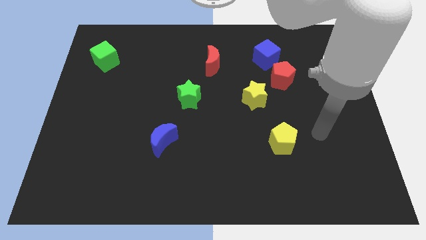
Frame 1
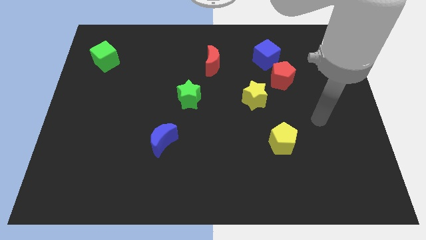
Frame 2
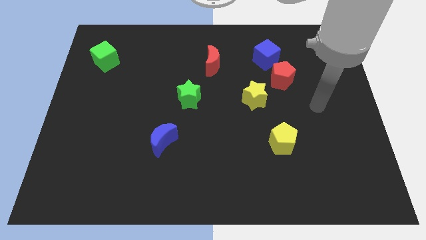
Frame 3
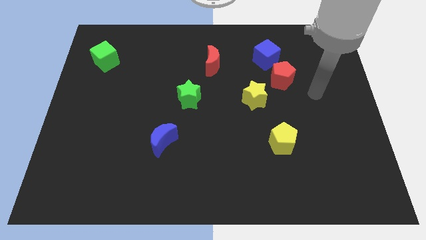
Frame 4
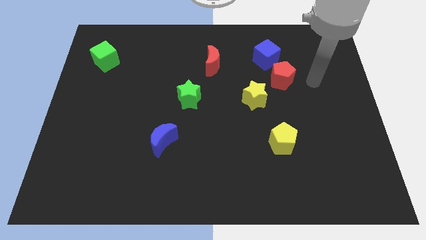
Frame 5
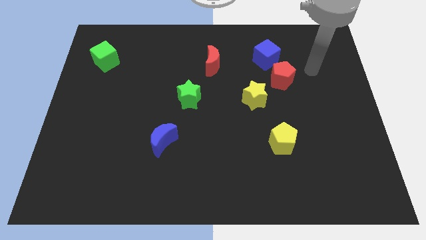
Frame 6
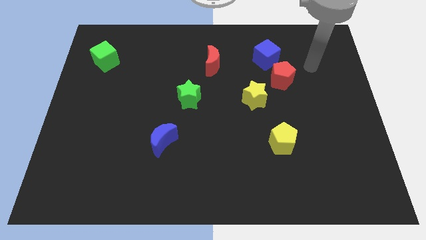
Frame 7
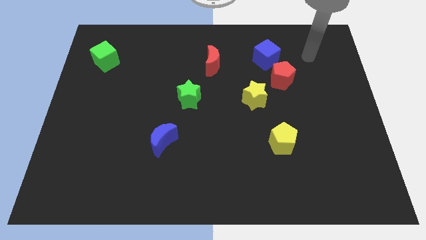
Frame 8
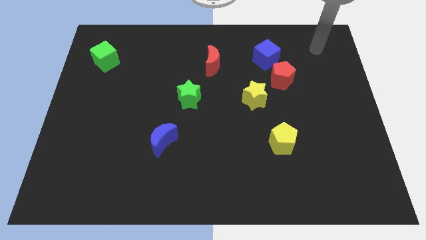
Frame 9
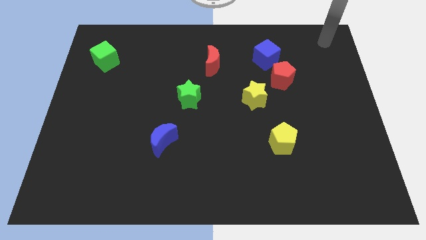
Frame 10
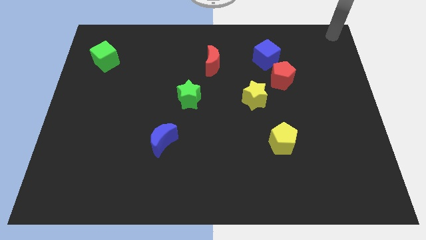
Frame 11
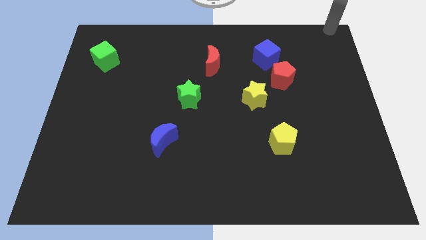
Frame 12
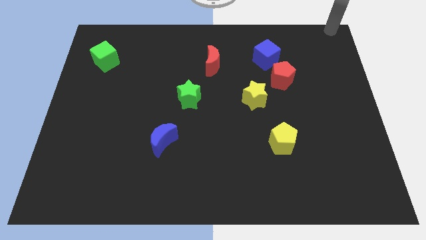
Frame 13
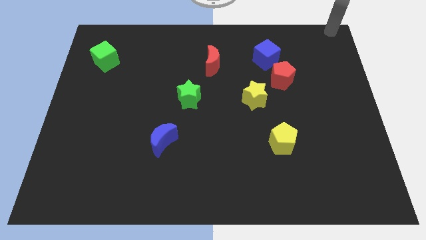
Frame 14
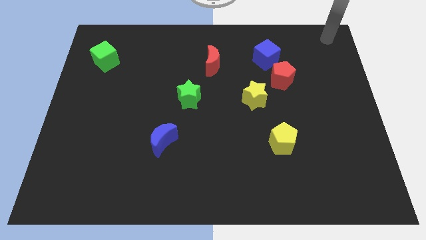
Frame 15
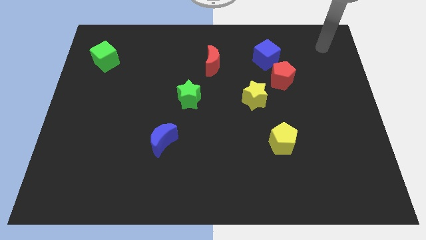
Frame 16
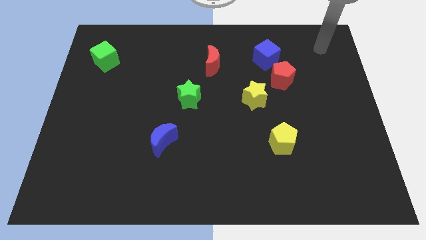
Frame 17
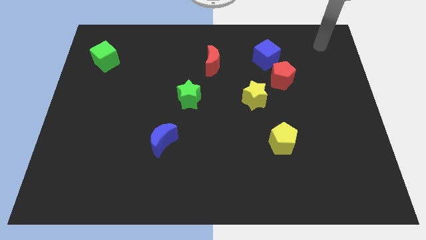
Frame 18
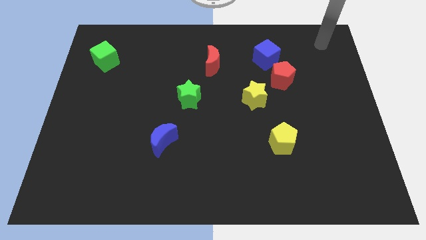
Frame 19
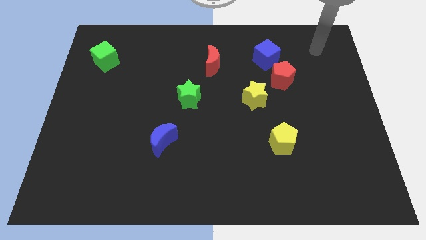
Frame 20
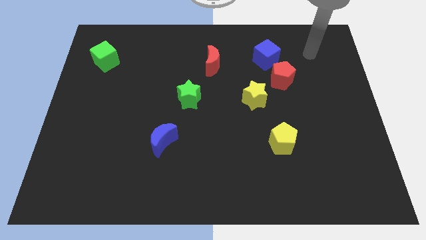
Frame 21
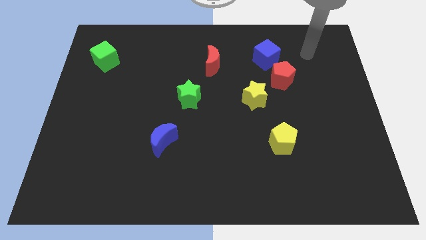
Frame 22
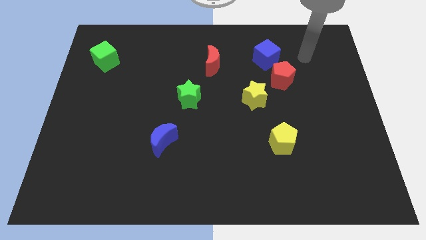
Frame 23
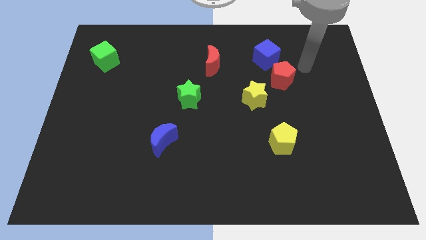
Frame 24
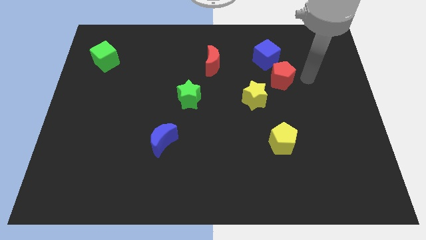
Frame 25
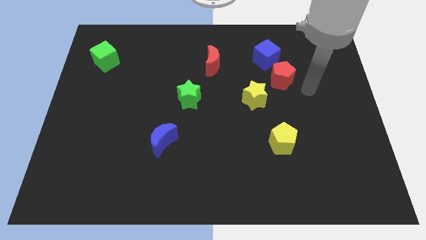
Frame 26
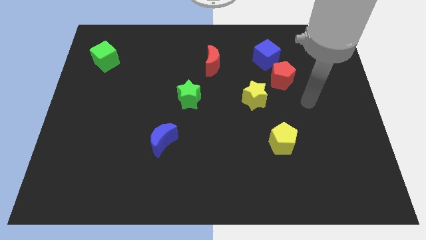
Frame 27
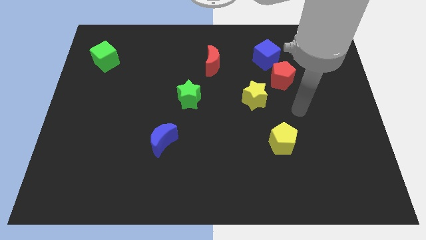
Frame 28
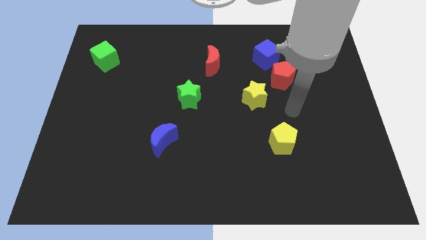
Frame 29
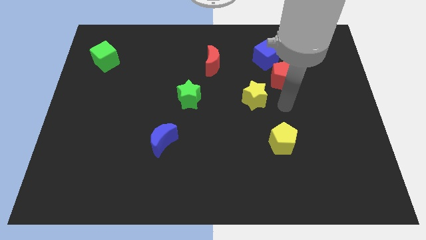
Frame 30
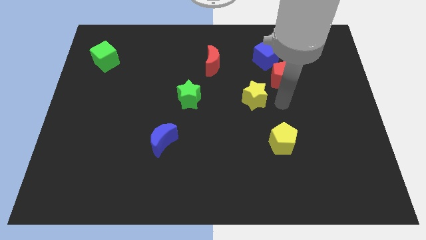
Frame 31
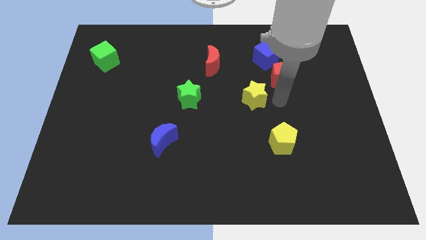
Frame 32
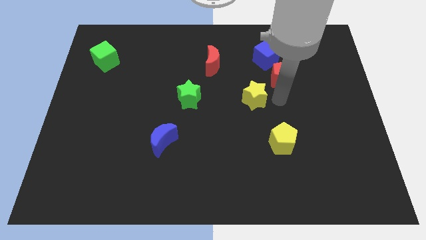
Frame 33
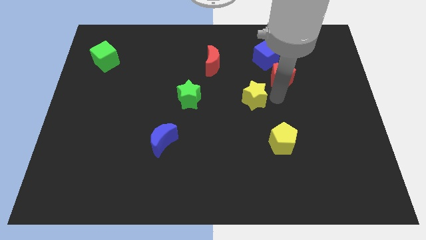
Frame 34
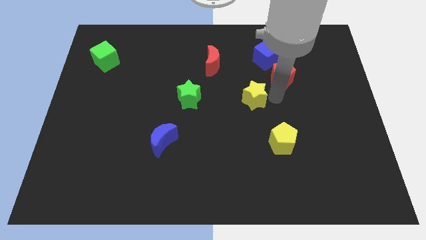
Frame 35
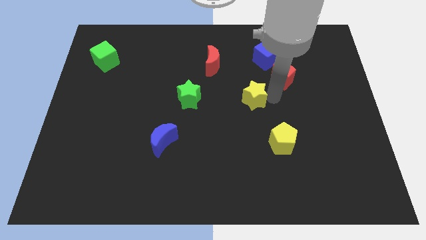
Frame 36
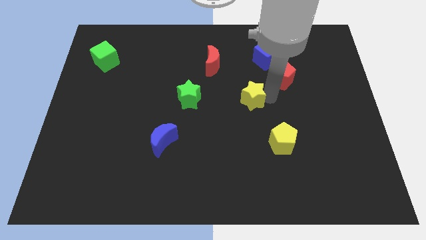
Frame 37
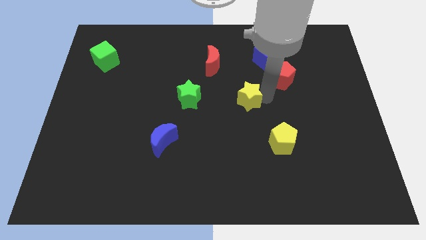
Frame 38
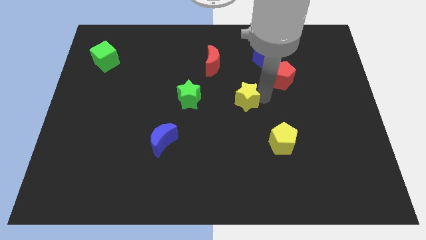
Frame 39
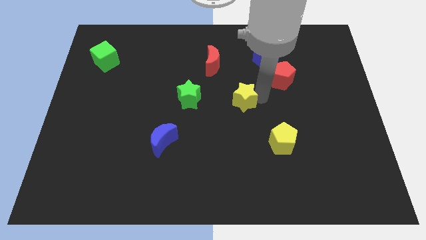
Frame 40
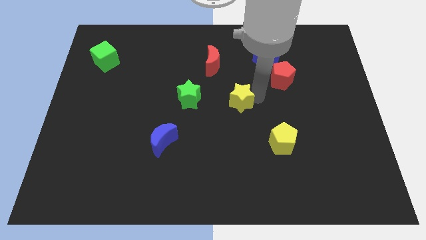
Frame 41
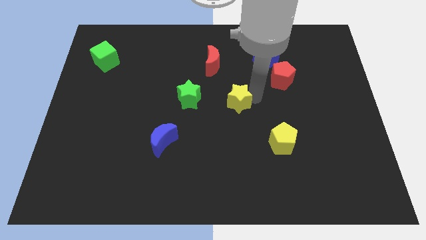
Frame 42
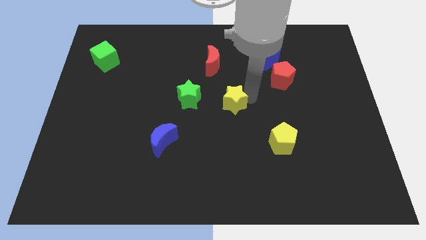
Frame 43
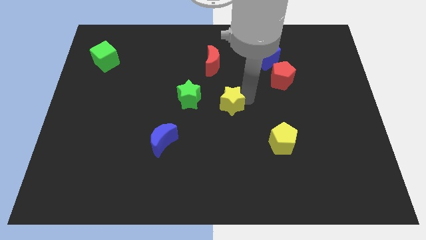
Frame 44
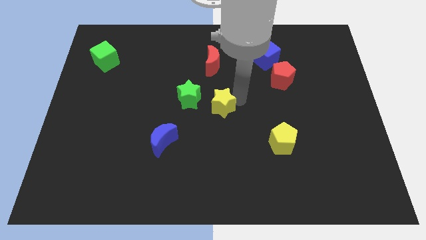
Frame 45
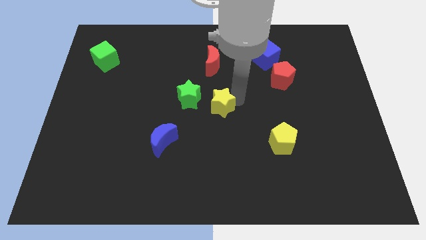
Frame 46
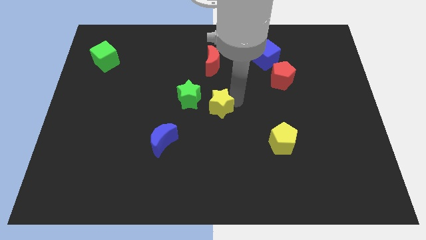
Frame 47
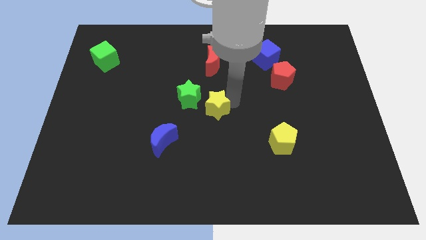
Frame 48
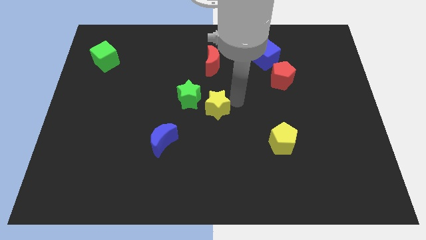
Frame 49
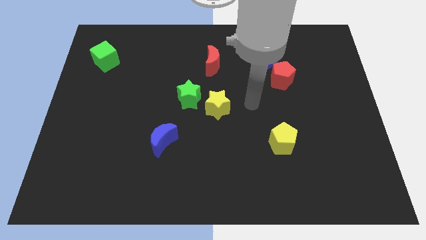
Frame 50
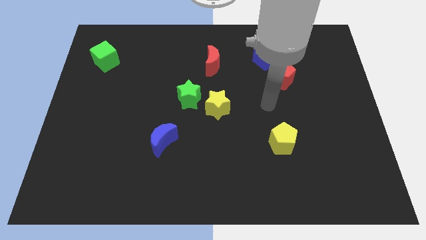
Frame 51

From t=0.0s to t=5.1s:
place the yellow star closer to the green star

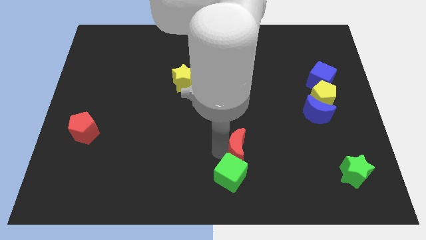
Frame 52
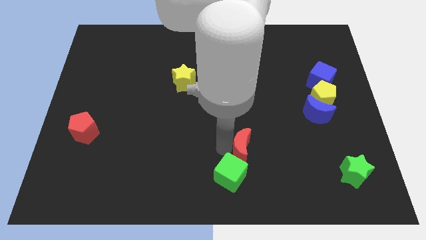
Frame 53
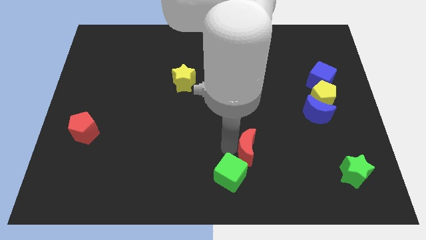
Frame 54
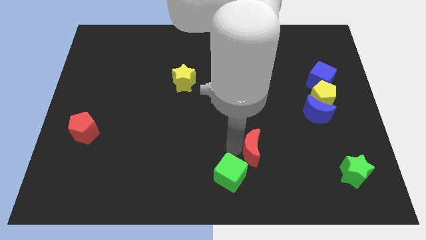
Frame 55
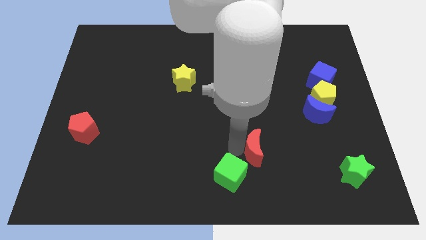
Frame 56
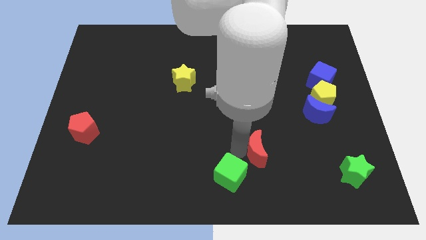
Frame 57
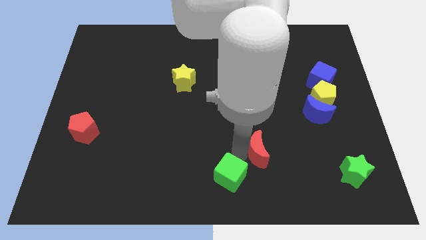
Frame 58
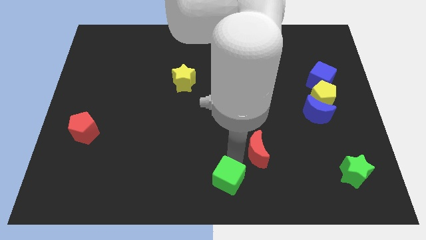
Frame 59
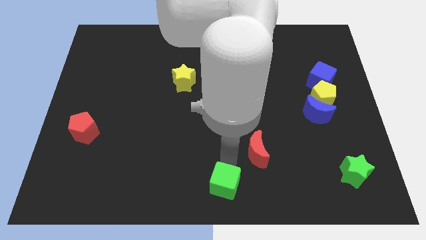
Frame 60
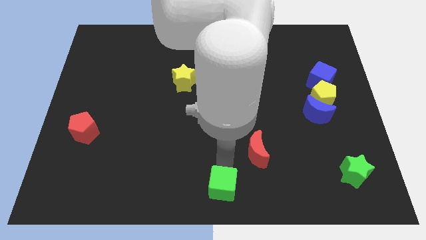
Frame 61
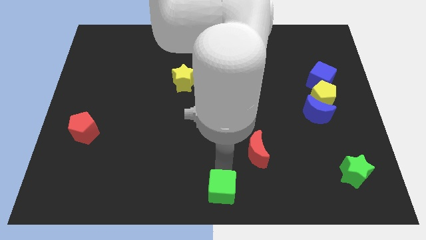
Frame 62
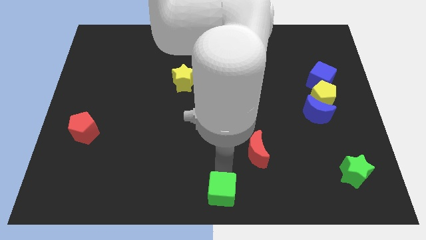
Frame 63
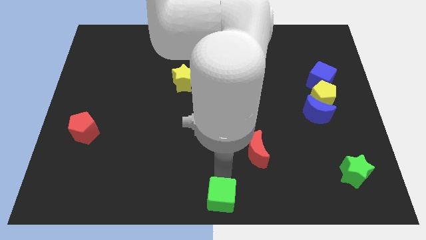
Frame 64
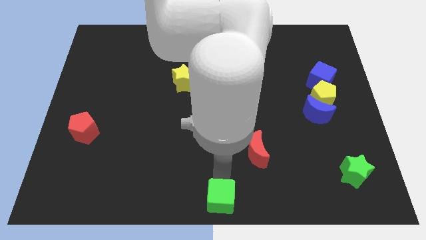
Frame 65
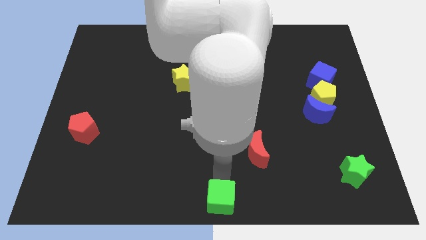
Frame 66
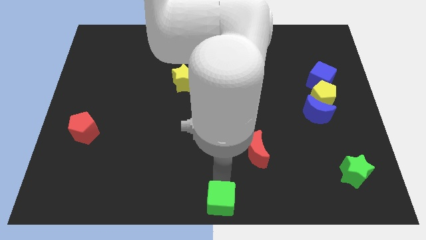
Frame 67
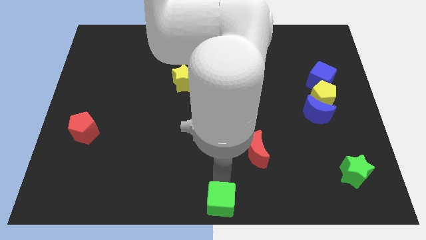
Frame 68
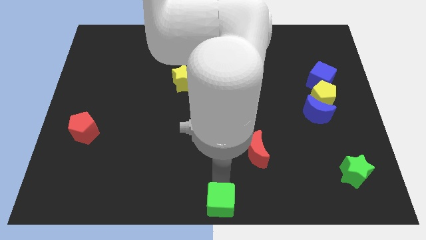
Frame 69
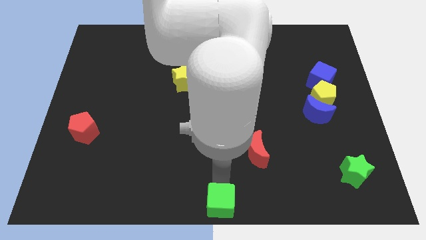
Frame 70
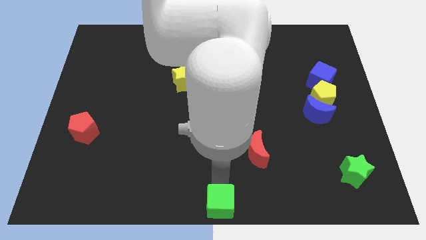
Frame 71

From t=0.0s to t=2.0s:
place the green cube at the bottom center of the board

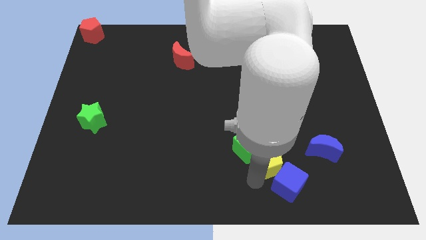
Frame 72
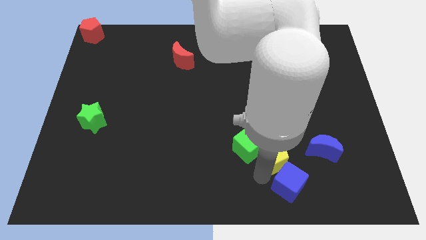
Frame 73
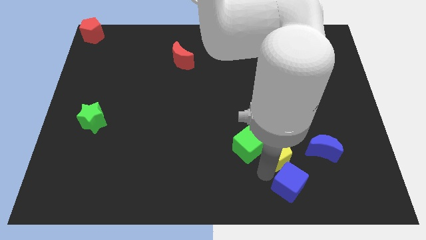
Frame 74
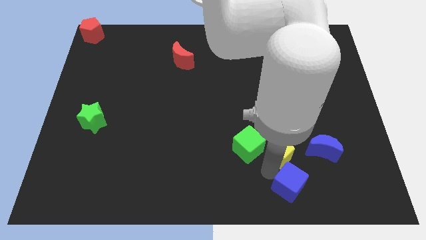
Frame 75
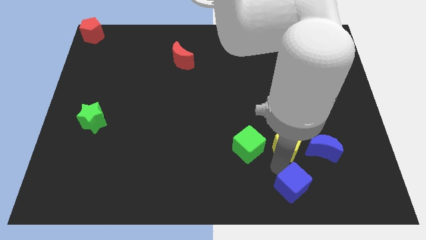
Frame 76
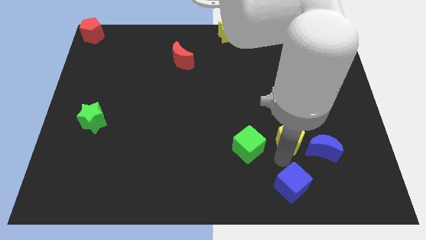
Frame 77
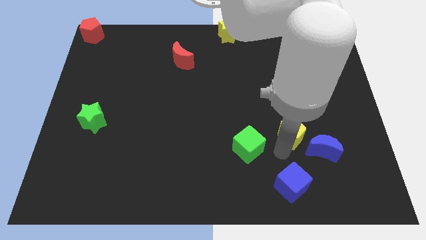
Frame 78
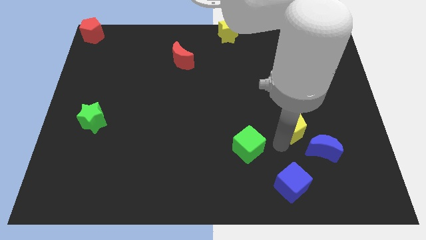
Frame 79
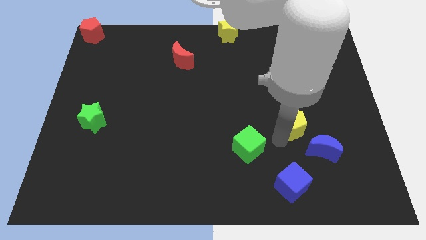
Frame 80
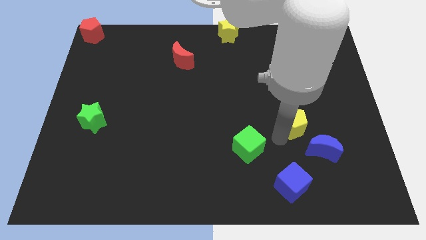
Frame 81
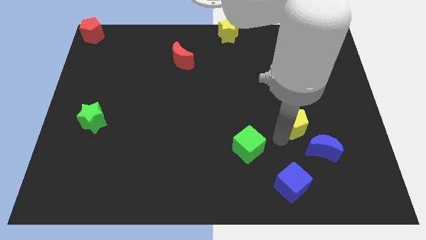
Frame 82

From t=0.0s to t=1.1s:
separate yellow pentagon from green cube and blue cube

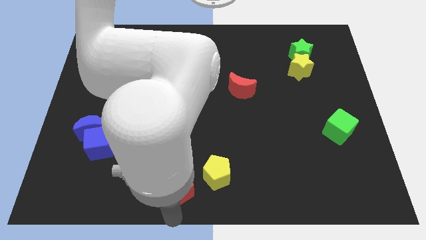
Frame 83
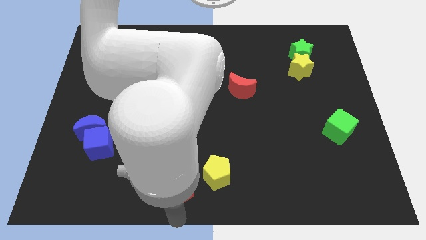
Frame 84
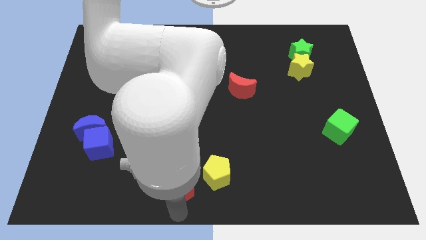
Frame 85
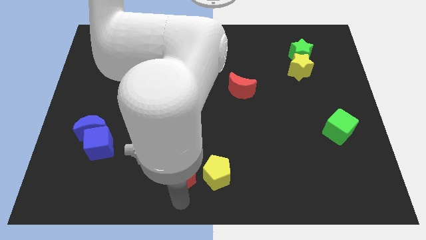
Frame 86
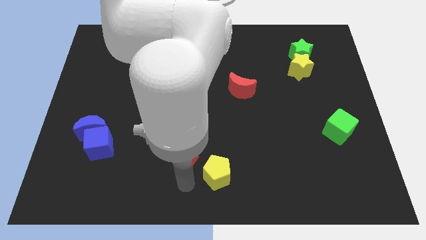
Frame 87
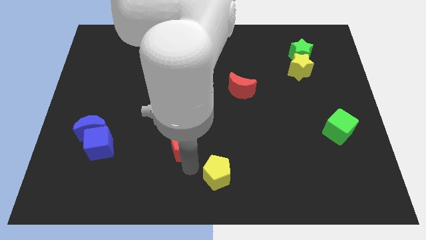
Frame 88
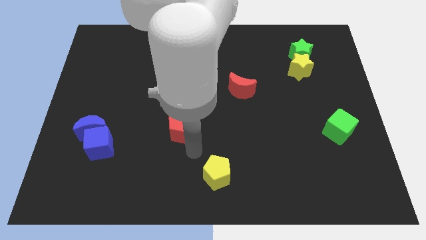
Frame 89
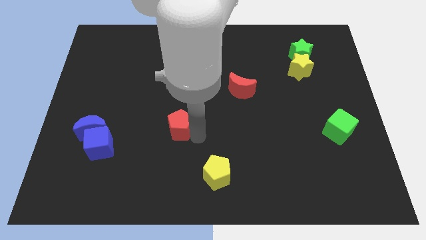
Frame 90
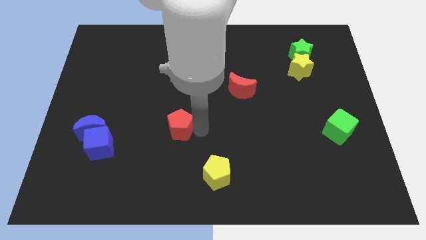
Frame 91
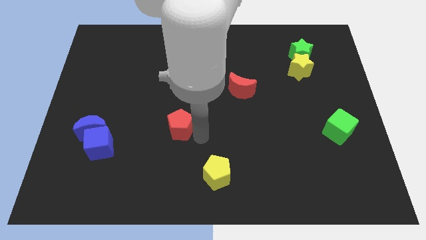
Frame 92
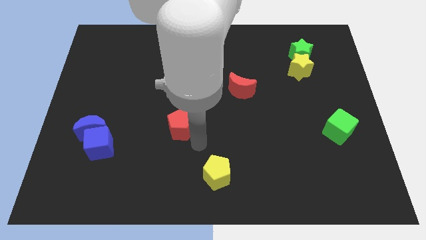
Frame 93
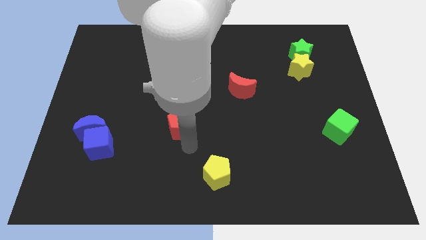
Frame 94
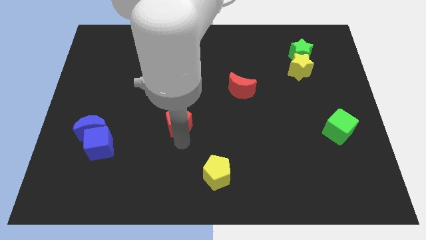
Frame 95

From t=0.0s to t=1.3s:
move the red pentagon to the right of the blue cube
